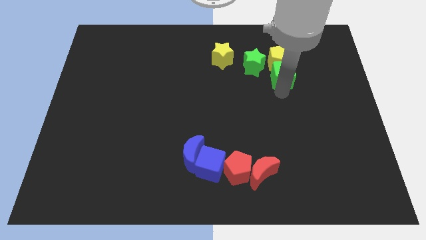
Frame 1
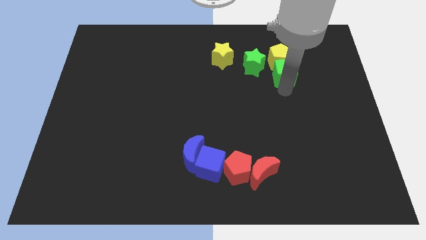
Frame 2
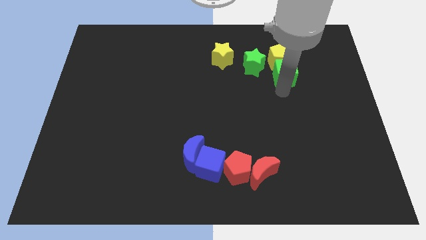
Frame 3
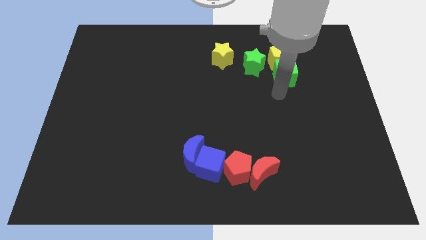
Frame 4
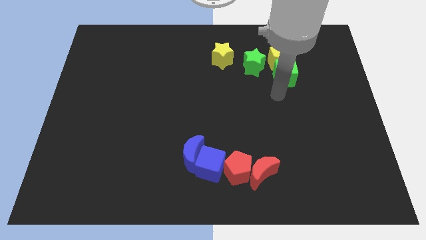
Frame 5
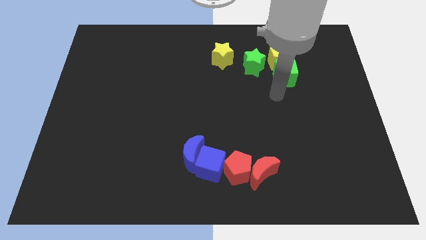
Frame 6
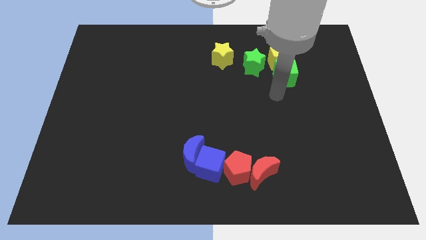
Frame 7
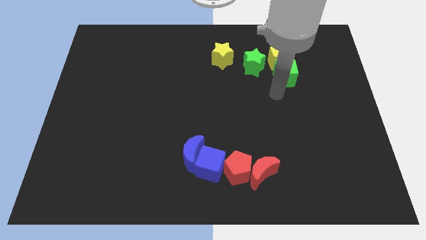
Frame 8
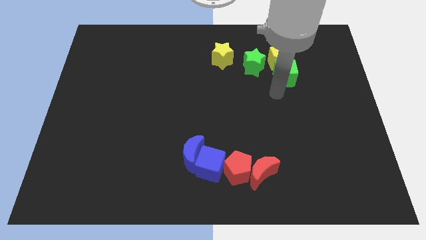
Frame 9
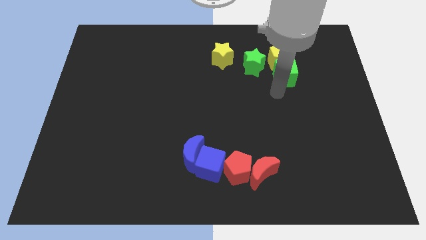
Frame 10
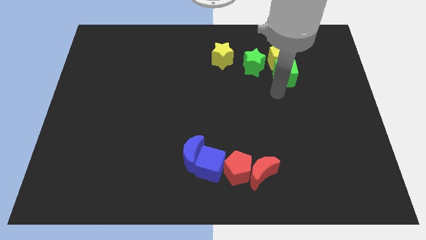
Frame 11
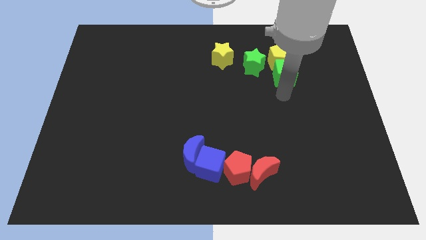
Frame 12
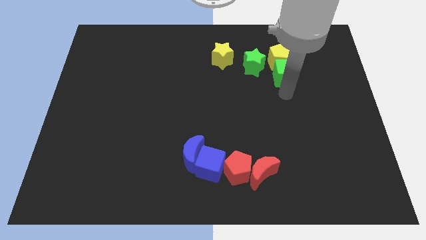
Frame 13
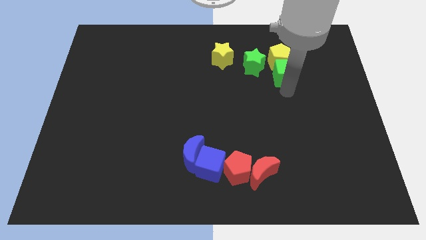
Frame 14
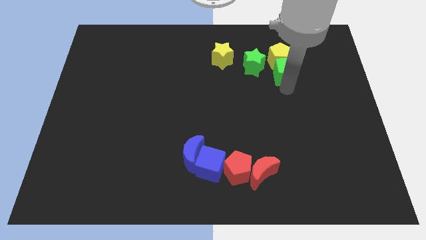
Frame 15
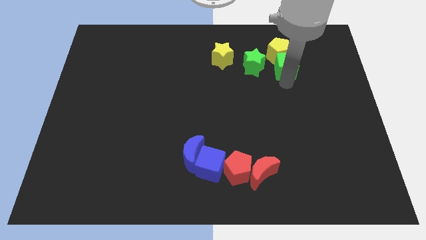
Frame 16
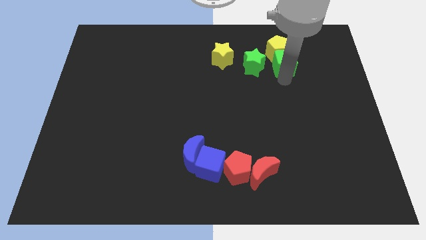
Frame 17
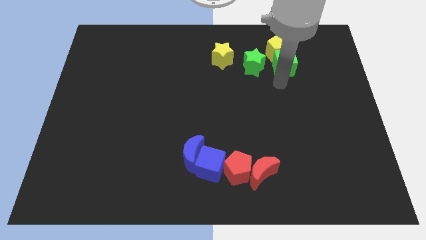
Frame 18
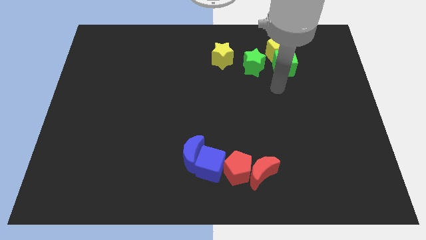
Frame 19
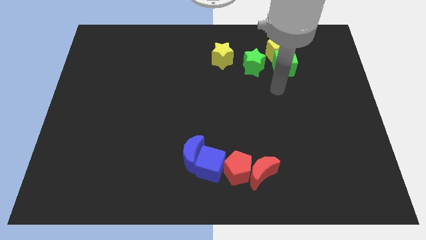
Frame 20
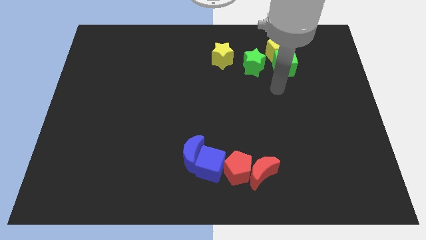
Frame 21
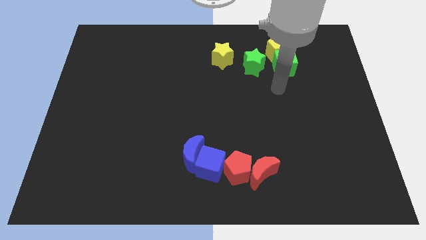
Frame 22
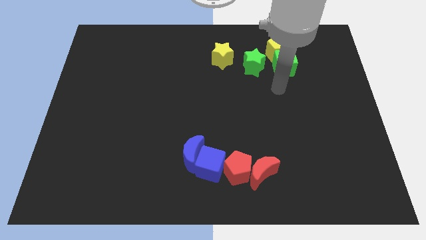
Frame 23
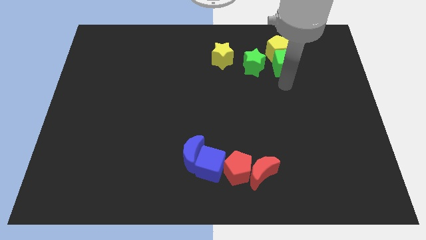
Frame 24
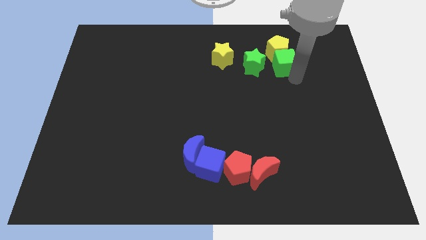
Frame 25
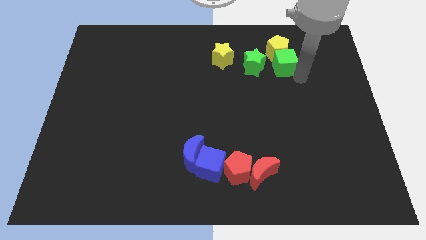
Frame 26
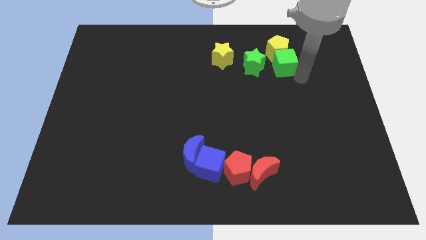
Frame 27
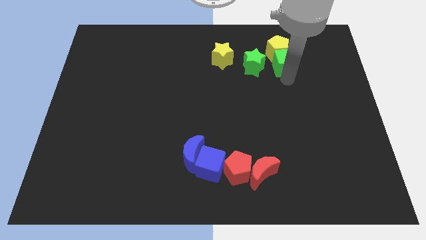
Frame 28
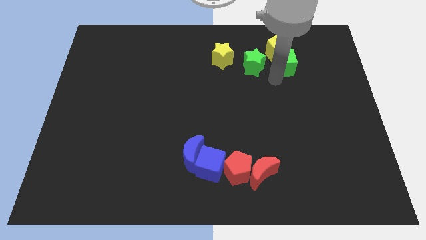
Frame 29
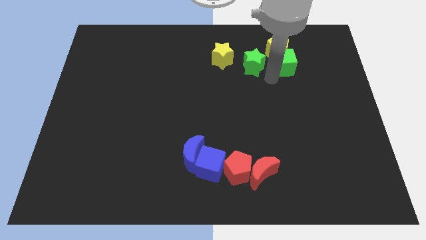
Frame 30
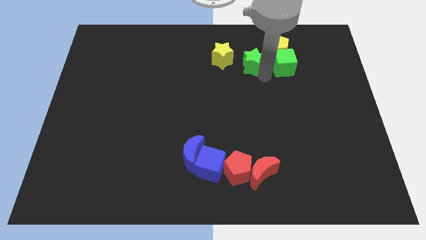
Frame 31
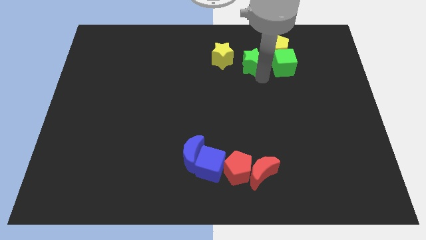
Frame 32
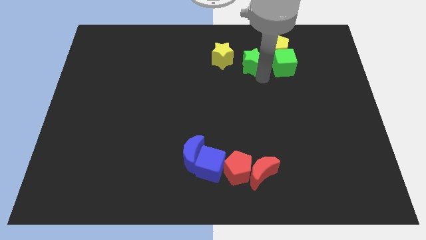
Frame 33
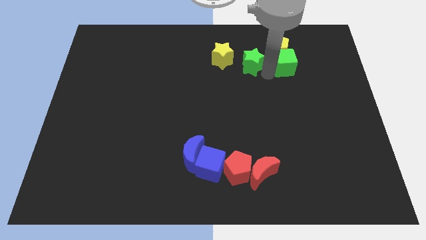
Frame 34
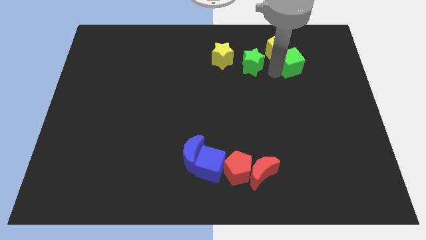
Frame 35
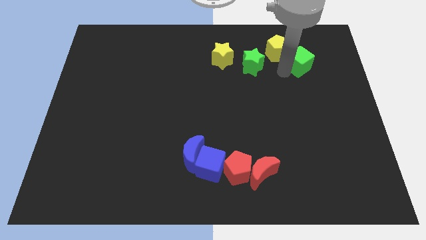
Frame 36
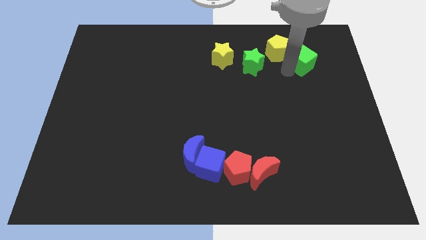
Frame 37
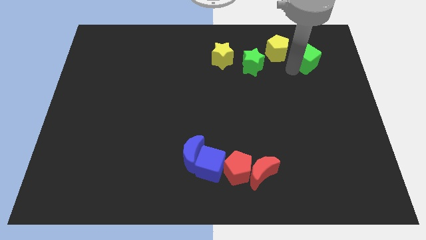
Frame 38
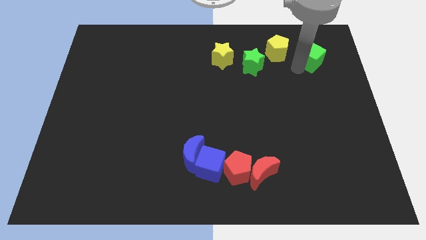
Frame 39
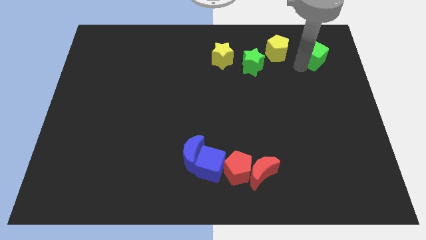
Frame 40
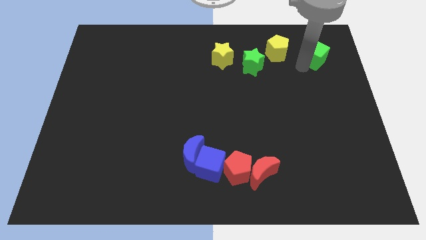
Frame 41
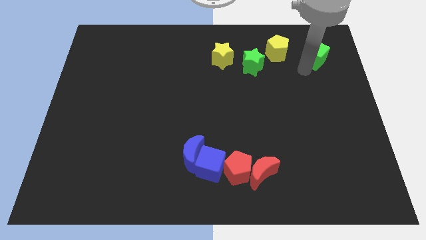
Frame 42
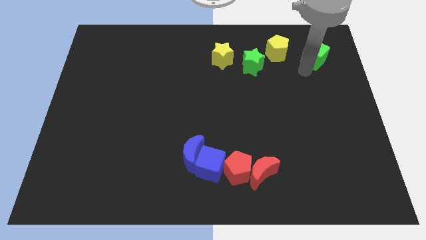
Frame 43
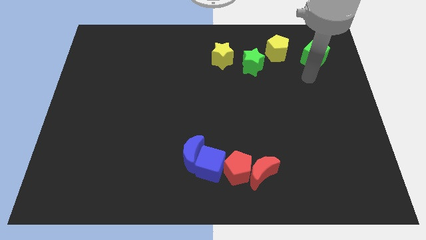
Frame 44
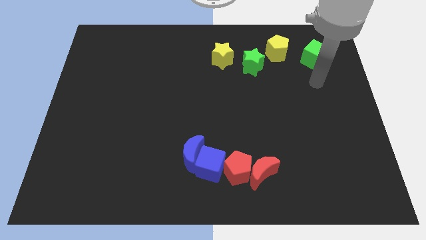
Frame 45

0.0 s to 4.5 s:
separate green cube from yellow pentagon

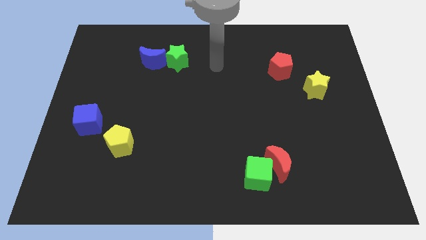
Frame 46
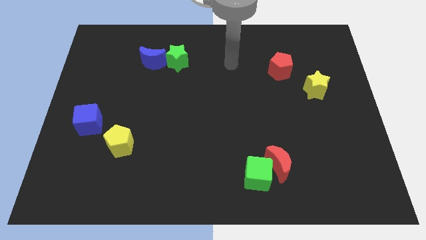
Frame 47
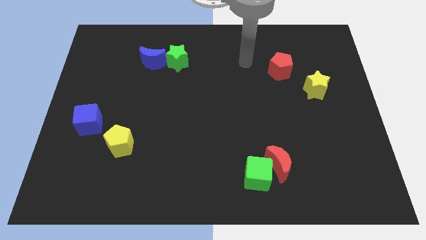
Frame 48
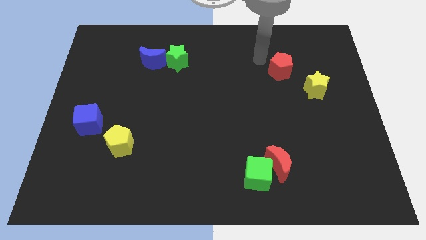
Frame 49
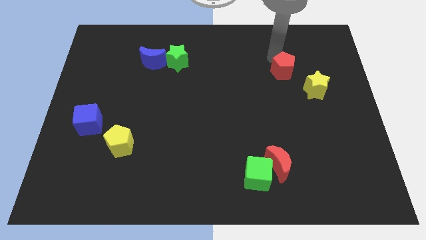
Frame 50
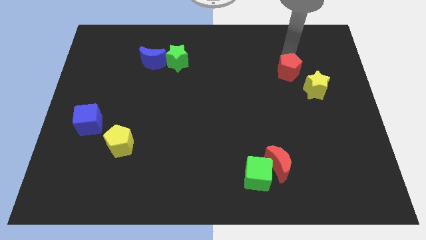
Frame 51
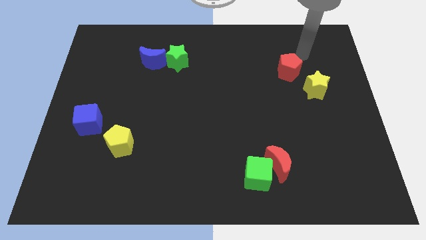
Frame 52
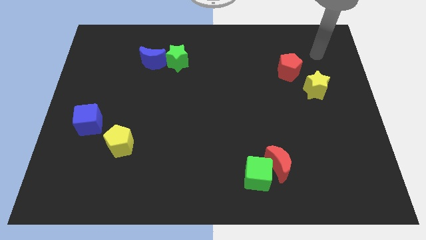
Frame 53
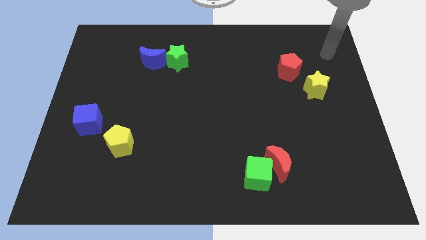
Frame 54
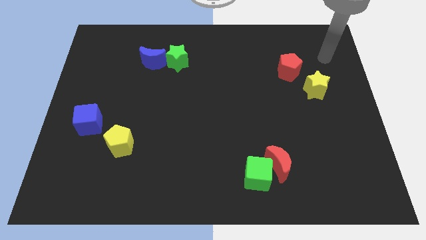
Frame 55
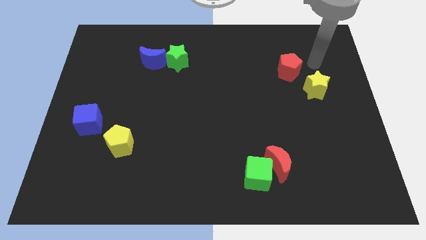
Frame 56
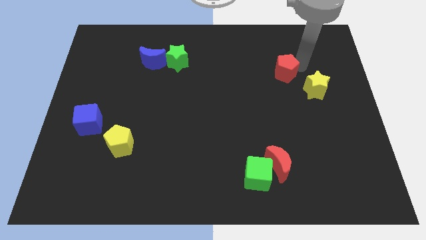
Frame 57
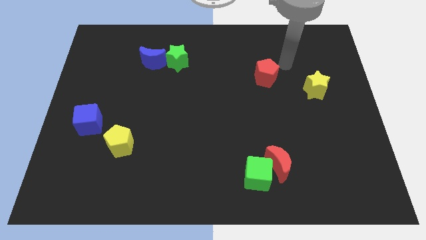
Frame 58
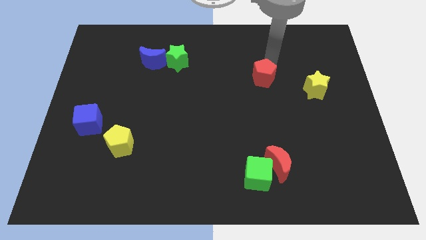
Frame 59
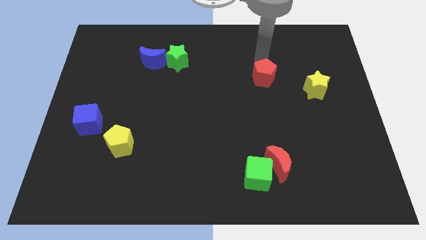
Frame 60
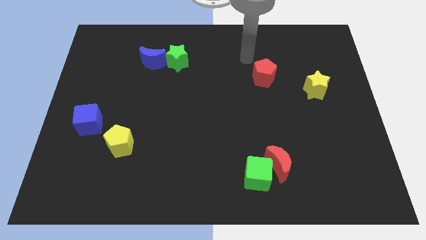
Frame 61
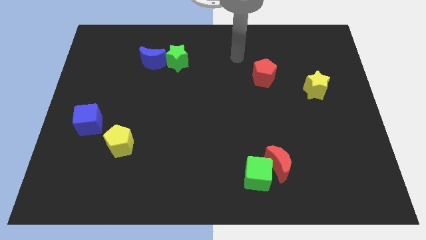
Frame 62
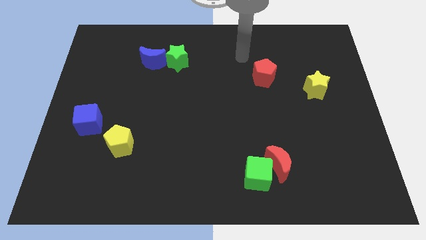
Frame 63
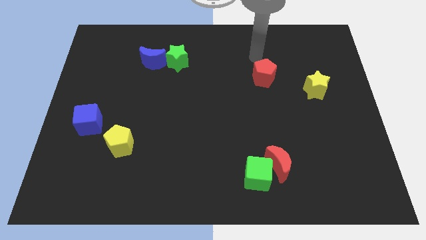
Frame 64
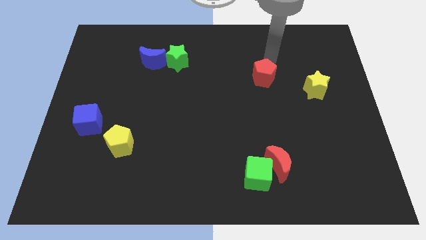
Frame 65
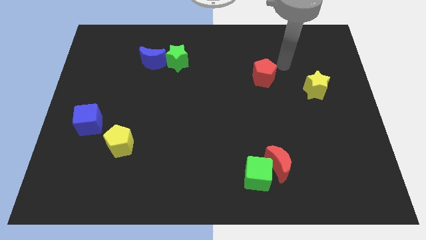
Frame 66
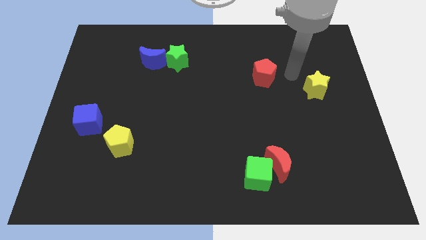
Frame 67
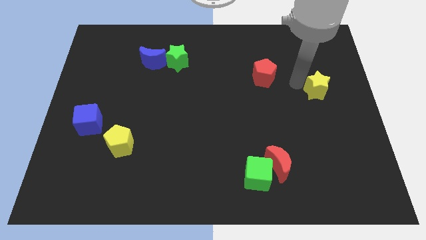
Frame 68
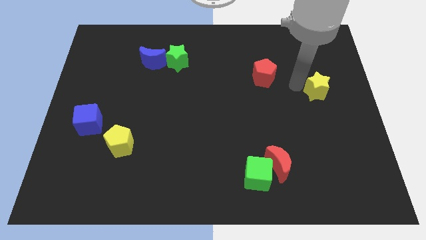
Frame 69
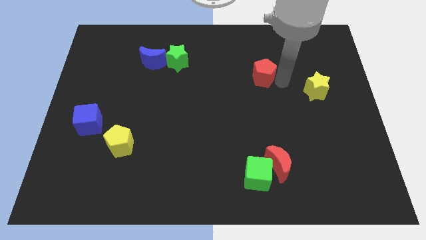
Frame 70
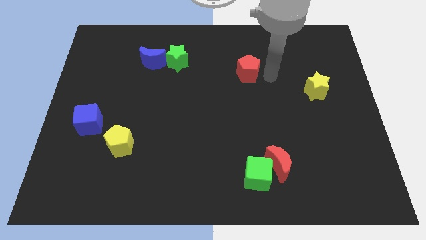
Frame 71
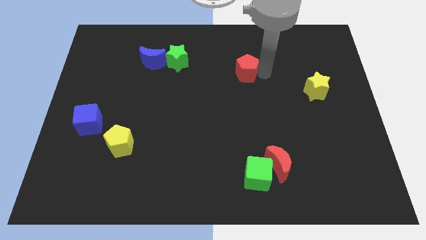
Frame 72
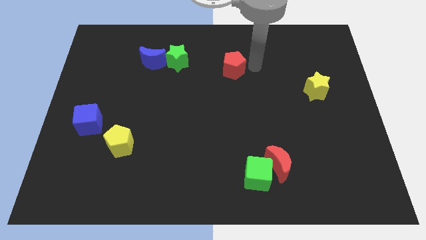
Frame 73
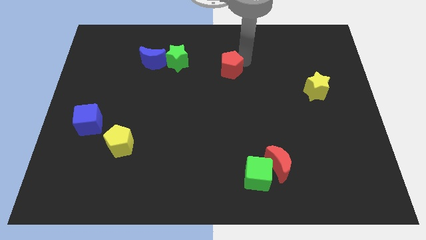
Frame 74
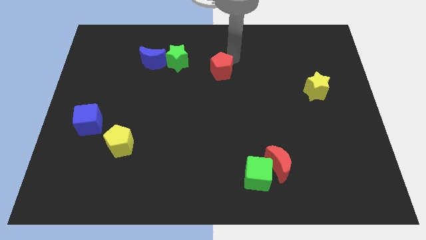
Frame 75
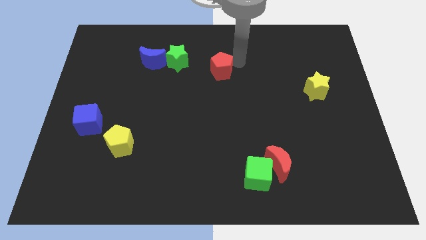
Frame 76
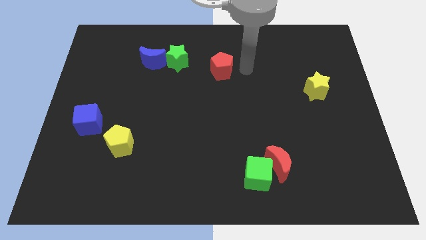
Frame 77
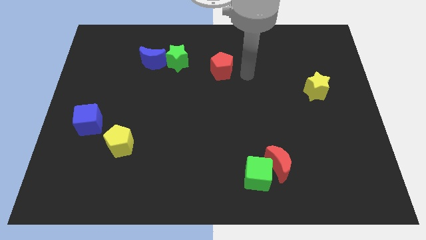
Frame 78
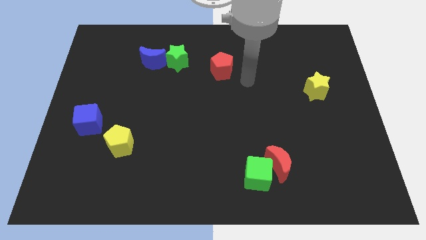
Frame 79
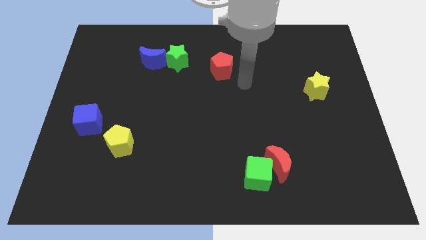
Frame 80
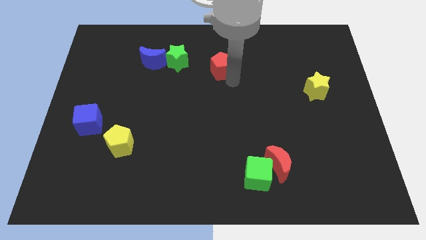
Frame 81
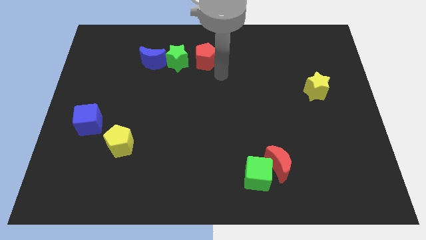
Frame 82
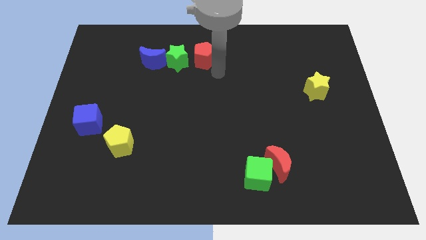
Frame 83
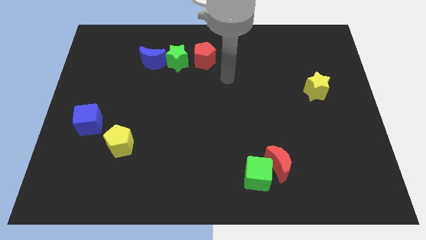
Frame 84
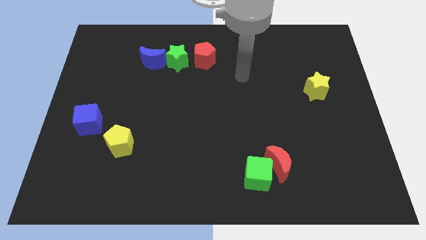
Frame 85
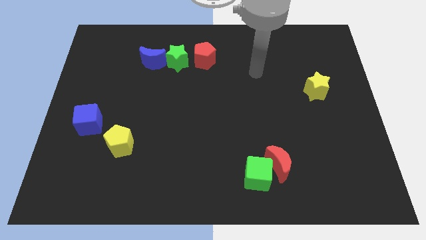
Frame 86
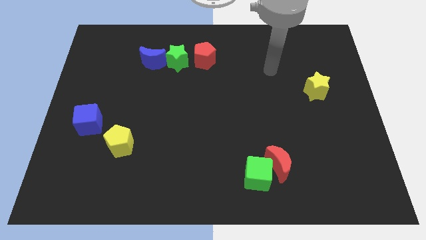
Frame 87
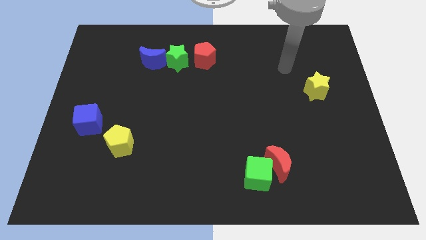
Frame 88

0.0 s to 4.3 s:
push the red pentagon to the right of the green star
